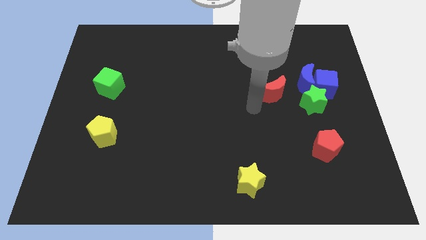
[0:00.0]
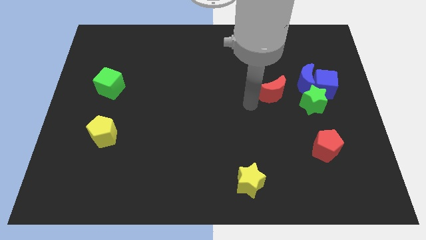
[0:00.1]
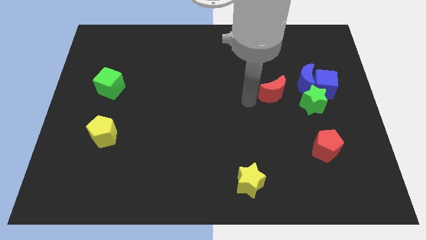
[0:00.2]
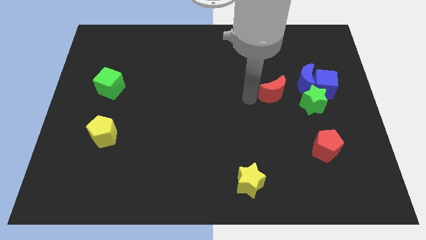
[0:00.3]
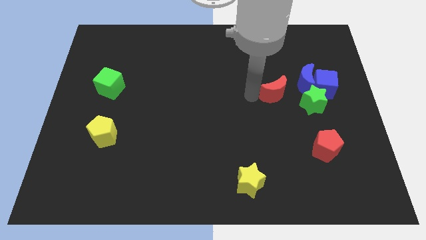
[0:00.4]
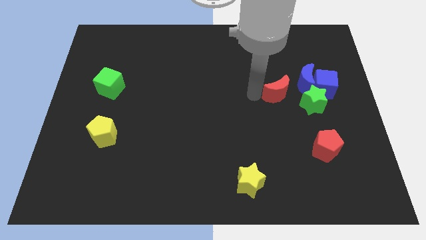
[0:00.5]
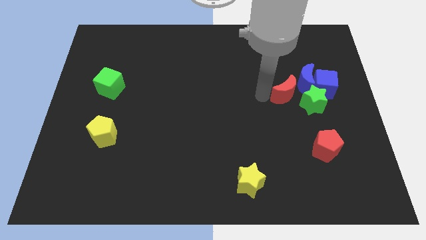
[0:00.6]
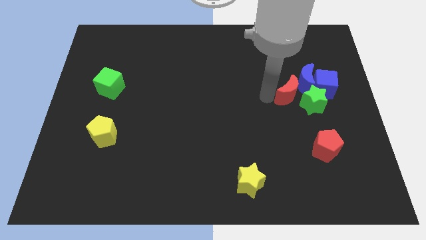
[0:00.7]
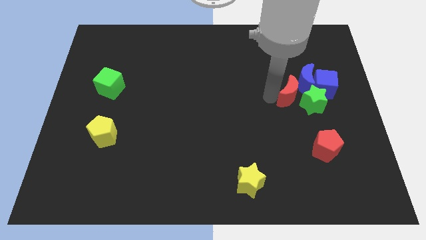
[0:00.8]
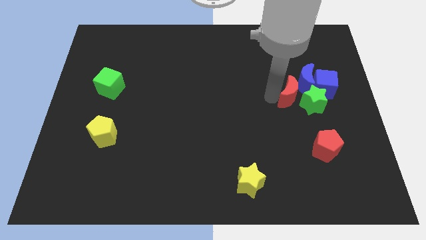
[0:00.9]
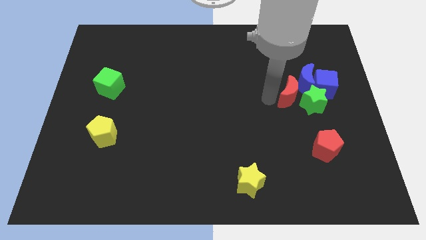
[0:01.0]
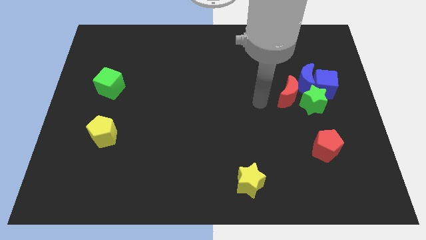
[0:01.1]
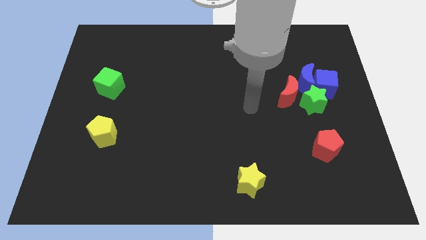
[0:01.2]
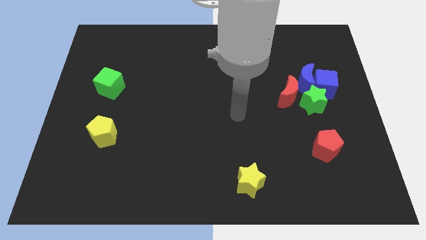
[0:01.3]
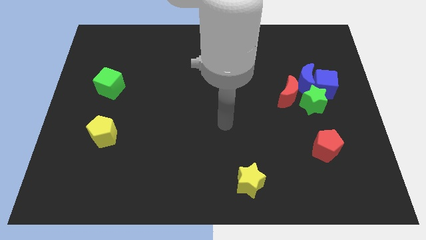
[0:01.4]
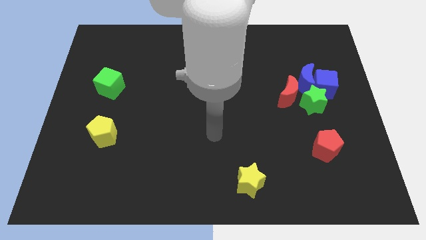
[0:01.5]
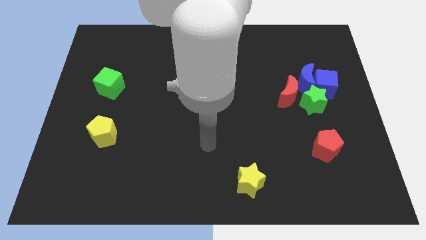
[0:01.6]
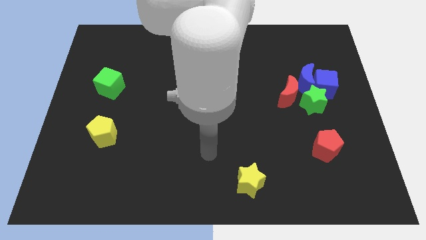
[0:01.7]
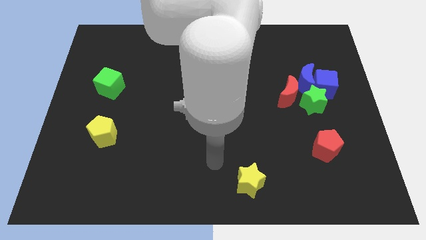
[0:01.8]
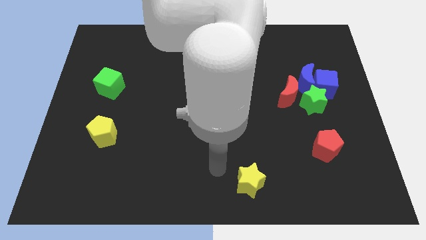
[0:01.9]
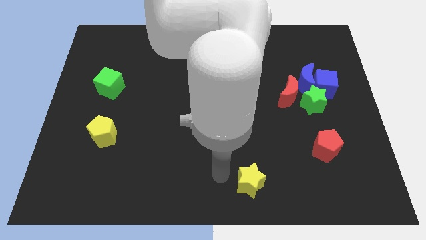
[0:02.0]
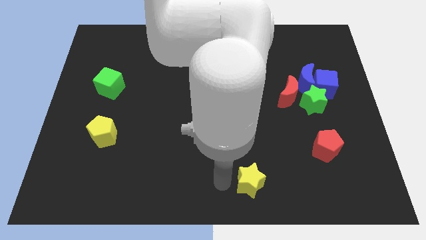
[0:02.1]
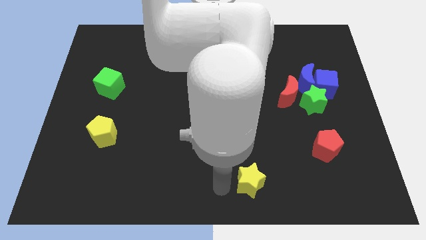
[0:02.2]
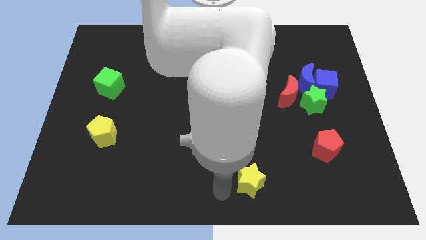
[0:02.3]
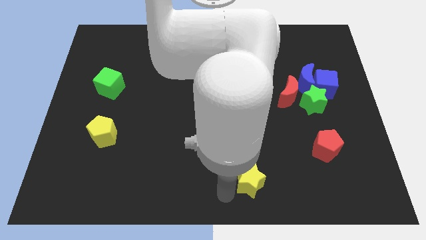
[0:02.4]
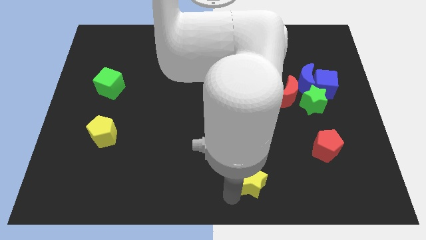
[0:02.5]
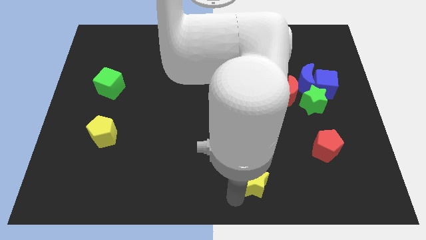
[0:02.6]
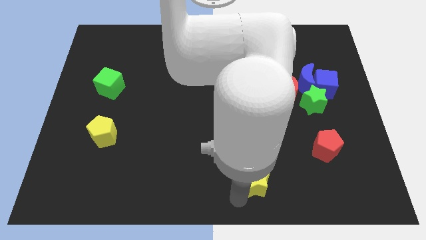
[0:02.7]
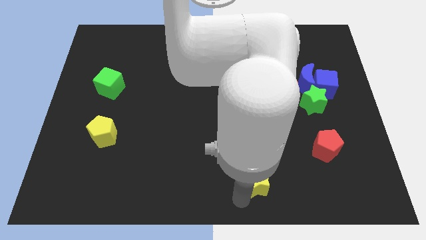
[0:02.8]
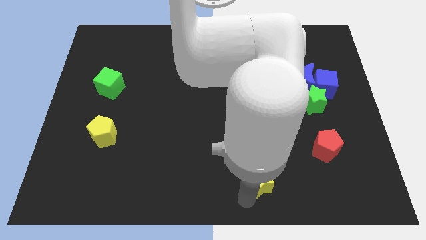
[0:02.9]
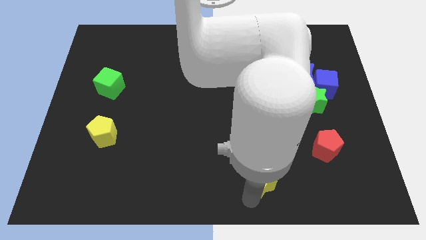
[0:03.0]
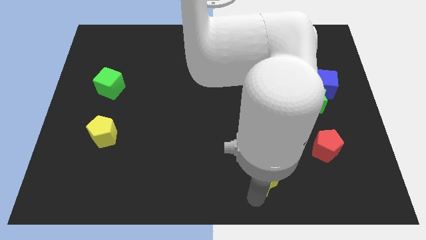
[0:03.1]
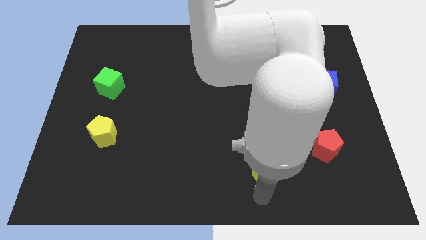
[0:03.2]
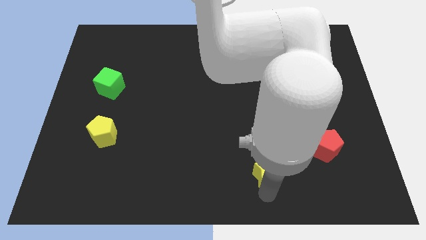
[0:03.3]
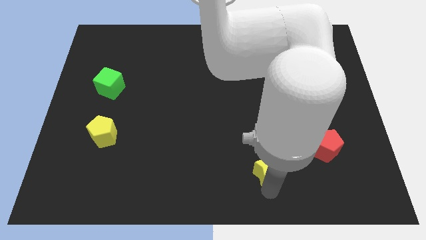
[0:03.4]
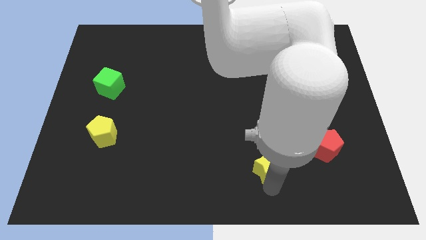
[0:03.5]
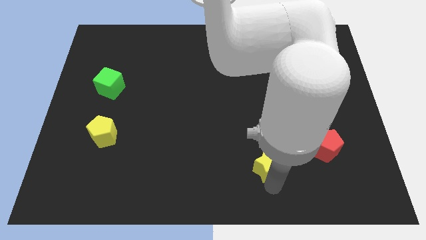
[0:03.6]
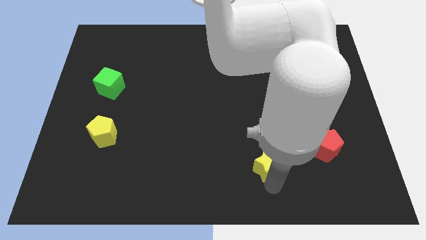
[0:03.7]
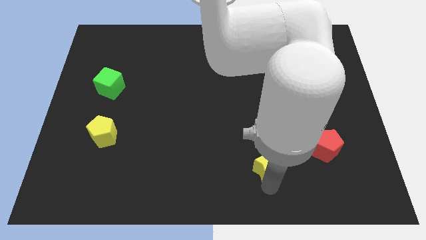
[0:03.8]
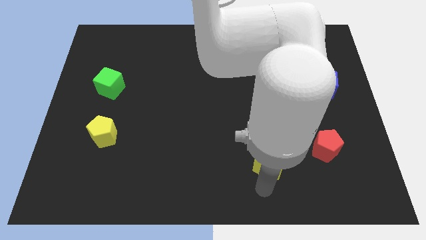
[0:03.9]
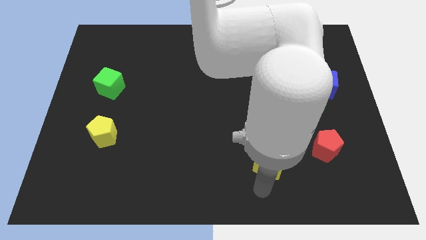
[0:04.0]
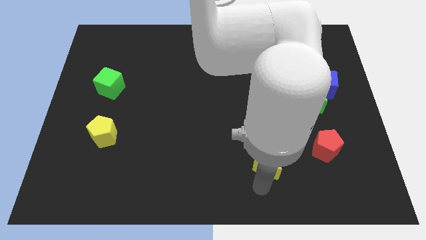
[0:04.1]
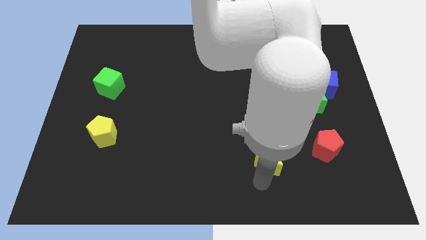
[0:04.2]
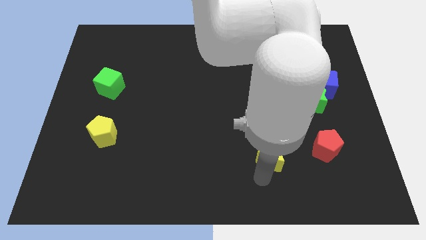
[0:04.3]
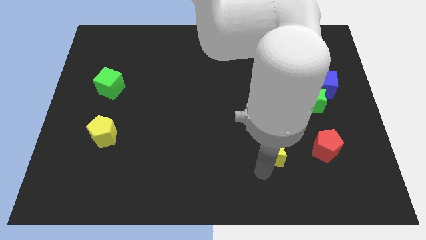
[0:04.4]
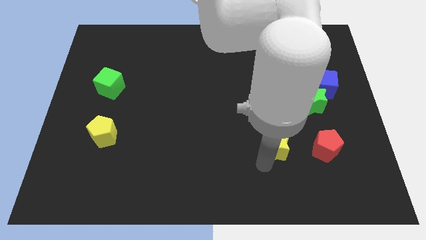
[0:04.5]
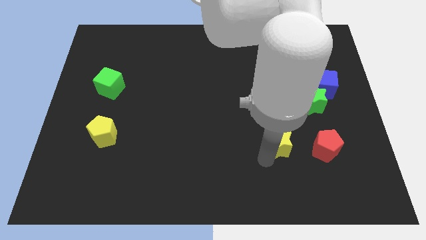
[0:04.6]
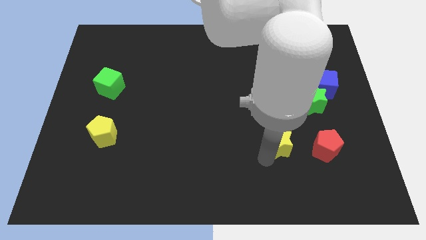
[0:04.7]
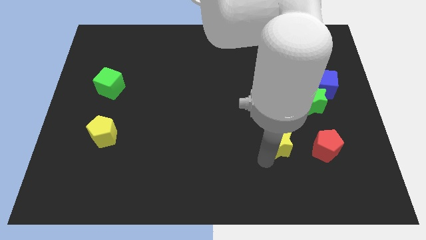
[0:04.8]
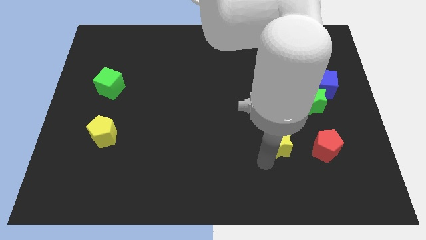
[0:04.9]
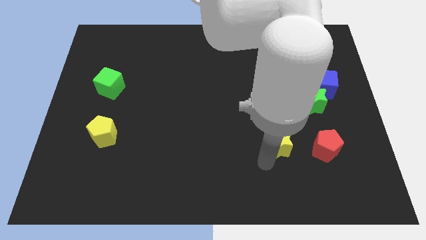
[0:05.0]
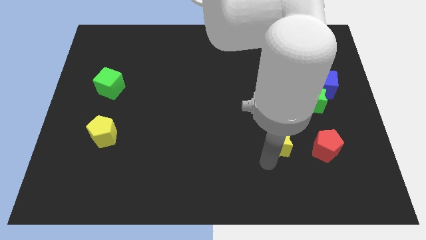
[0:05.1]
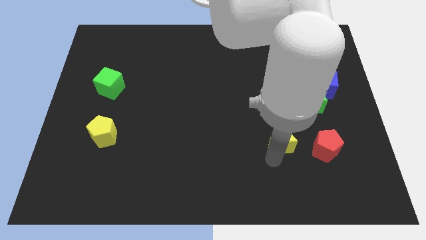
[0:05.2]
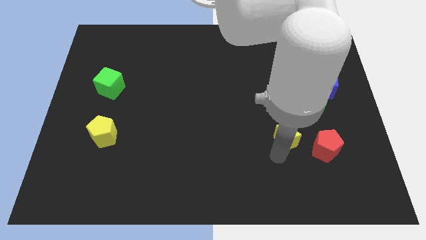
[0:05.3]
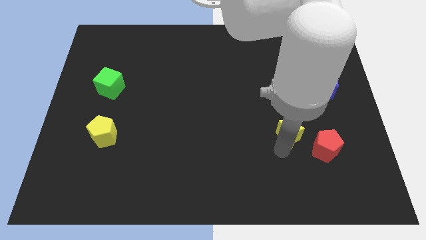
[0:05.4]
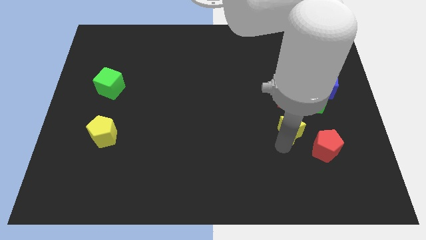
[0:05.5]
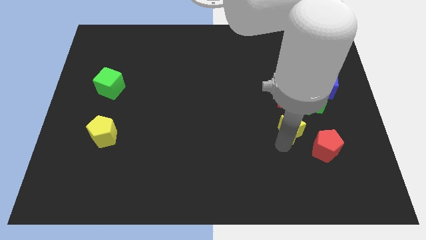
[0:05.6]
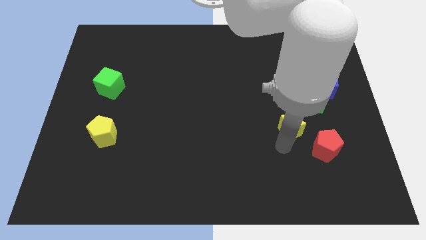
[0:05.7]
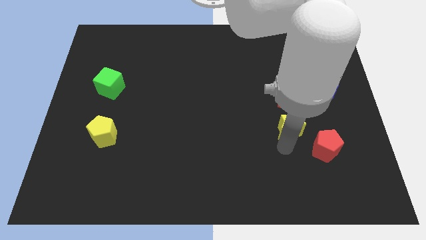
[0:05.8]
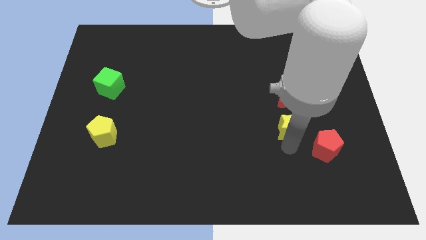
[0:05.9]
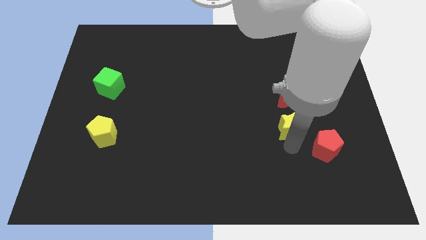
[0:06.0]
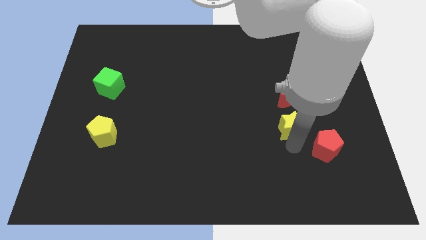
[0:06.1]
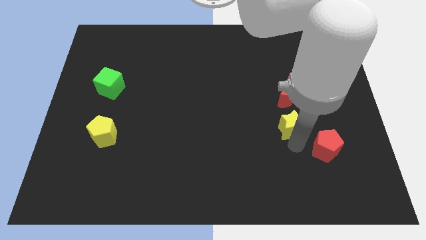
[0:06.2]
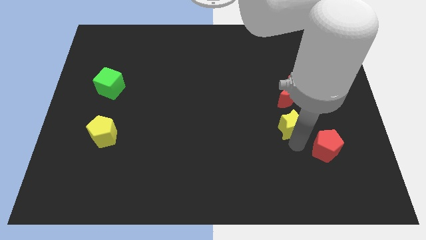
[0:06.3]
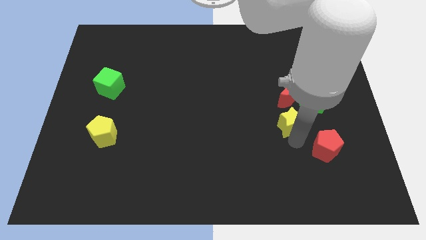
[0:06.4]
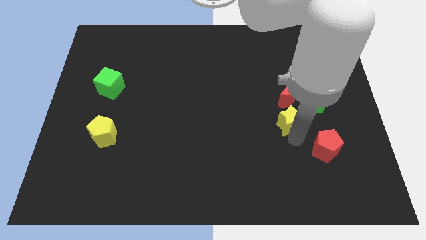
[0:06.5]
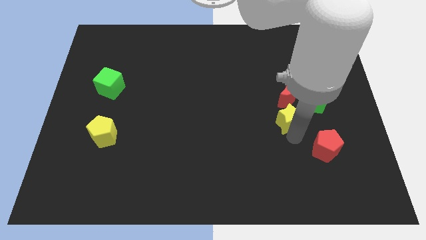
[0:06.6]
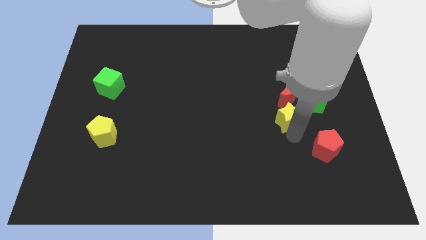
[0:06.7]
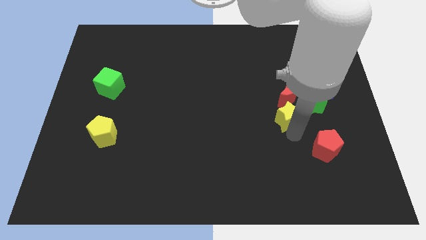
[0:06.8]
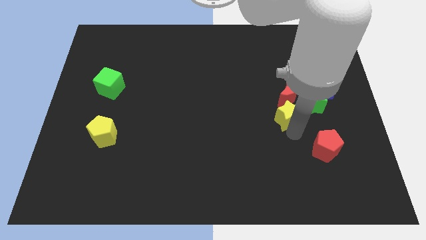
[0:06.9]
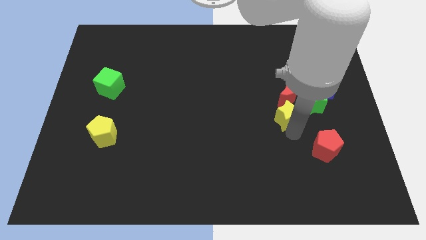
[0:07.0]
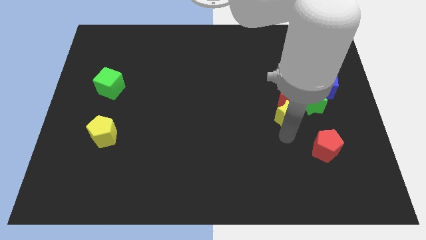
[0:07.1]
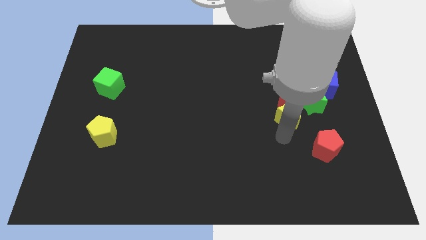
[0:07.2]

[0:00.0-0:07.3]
place the yellow star below the red crescent

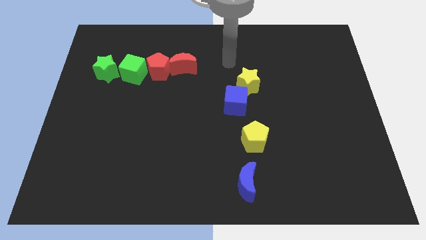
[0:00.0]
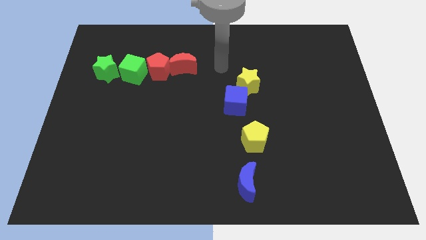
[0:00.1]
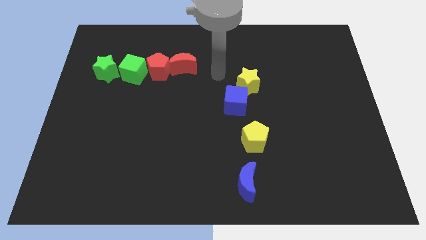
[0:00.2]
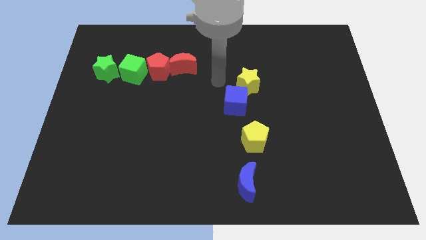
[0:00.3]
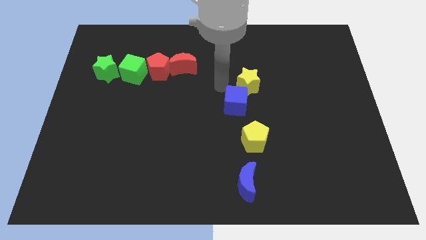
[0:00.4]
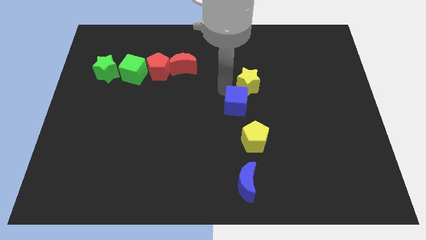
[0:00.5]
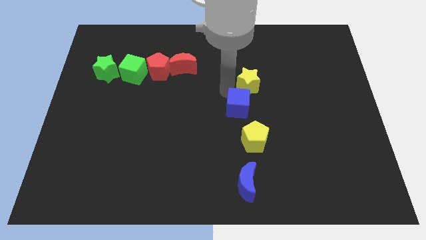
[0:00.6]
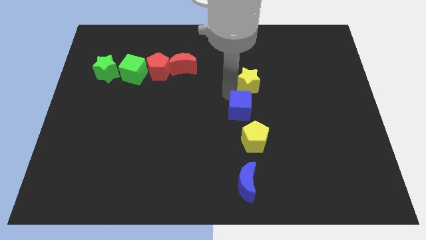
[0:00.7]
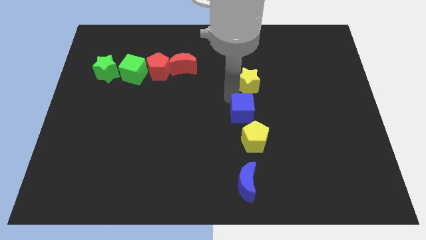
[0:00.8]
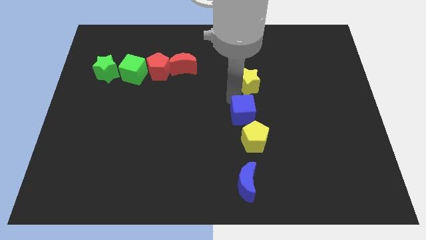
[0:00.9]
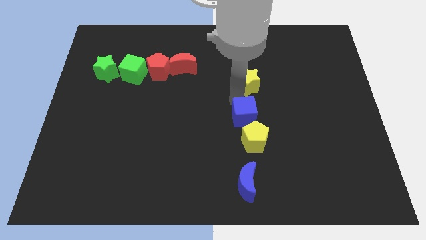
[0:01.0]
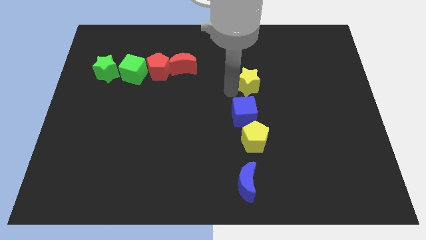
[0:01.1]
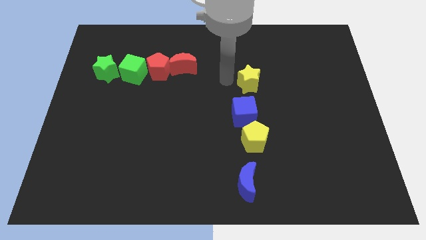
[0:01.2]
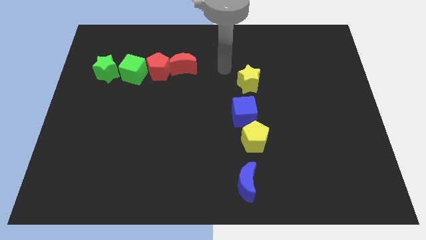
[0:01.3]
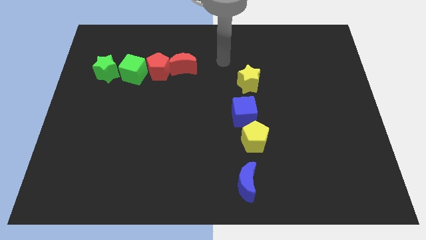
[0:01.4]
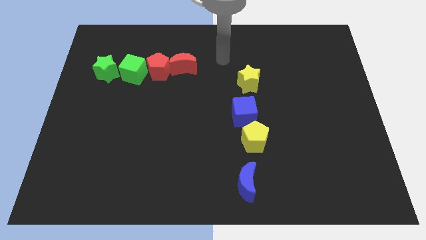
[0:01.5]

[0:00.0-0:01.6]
push the blue cube above the yellow pentagon

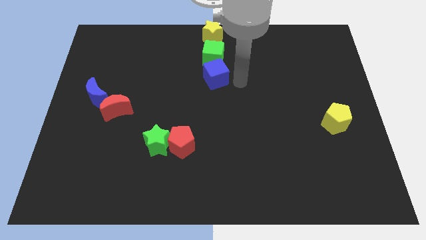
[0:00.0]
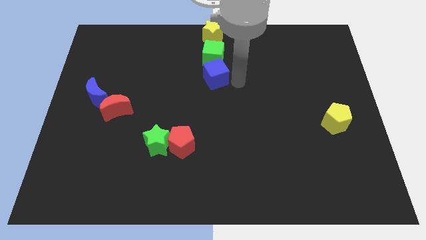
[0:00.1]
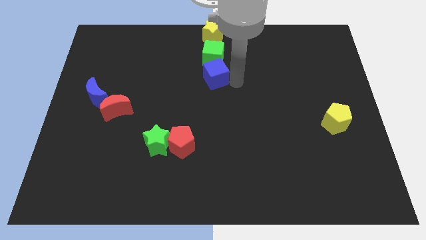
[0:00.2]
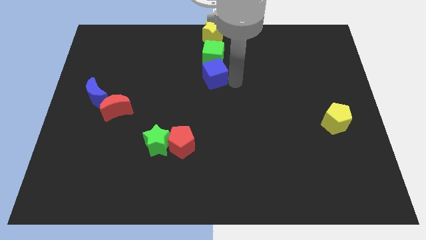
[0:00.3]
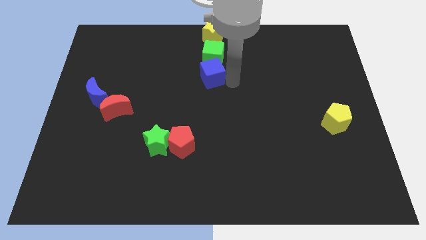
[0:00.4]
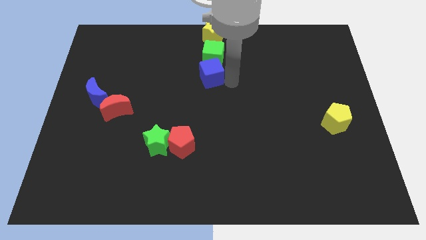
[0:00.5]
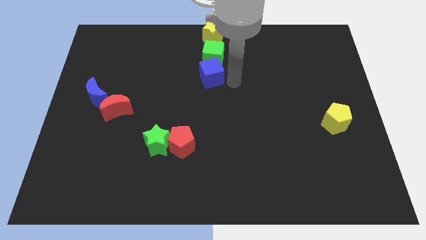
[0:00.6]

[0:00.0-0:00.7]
move the blue cube slightly towards the left
